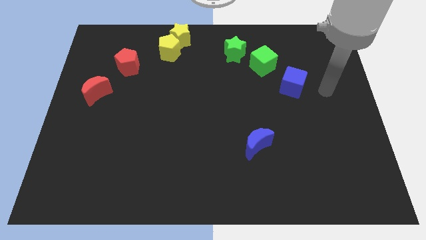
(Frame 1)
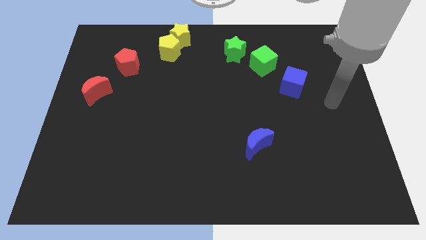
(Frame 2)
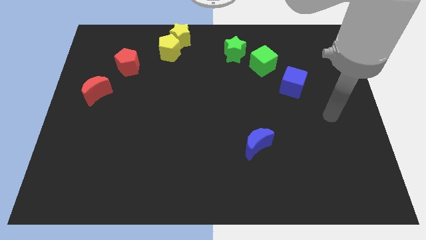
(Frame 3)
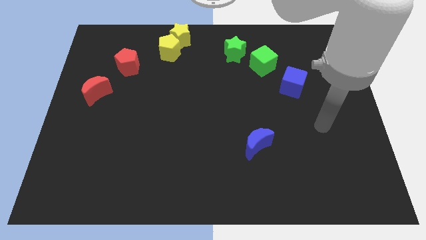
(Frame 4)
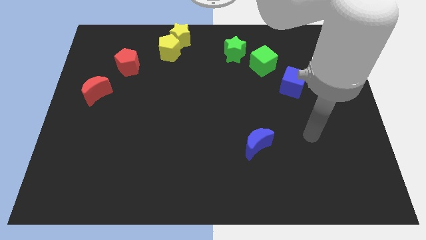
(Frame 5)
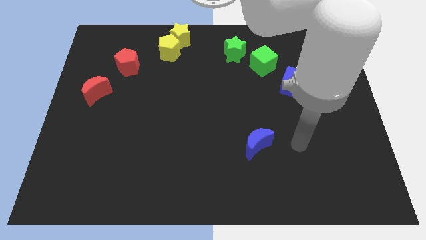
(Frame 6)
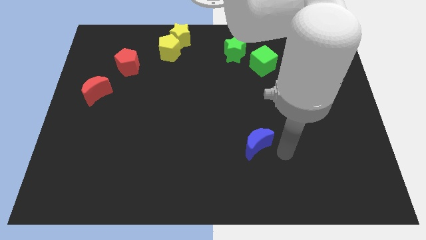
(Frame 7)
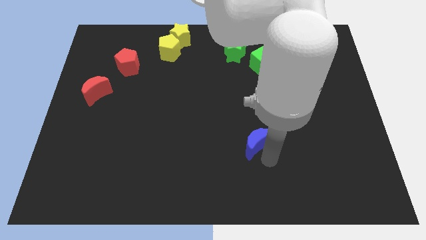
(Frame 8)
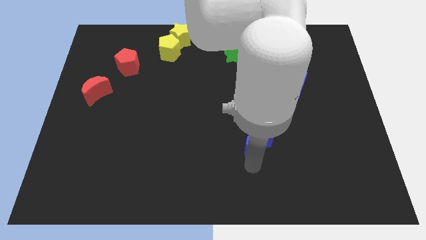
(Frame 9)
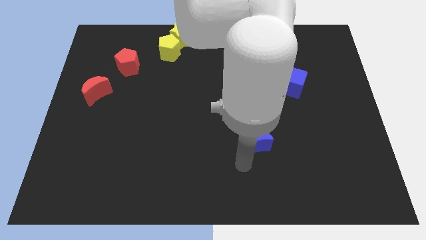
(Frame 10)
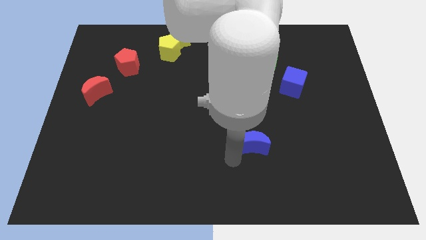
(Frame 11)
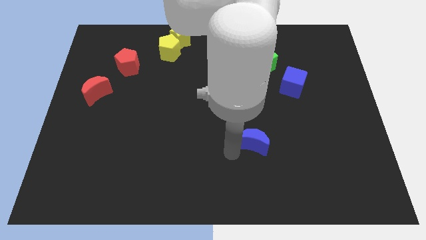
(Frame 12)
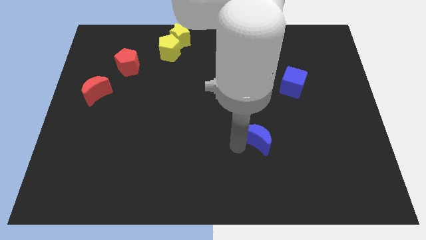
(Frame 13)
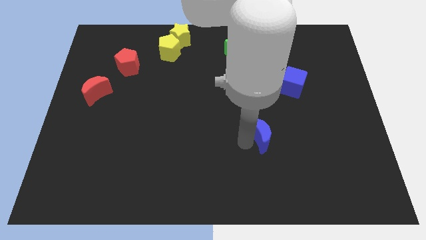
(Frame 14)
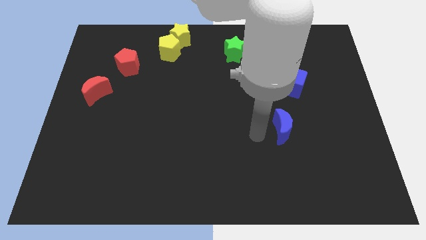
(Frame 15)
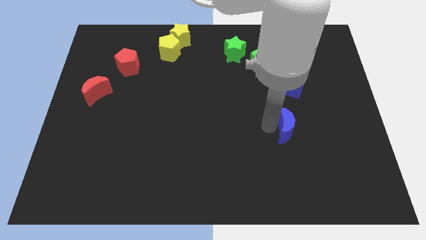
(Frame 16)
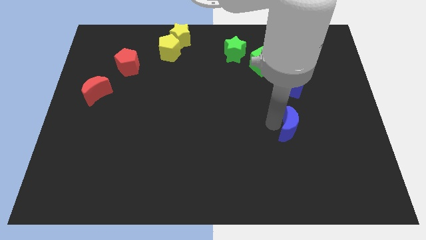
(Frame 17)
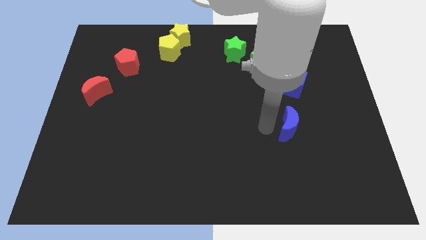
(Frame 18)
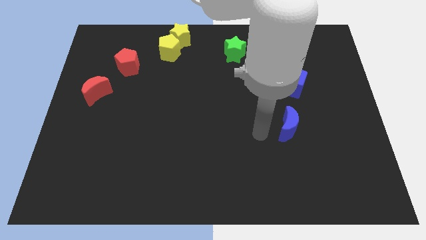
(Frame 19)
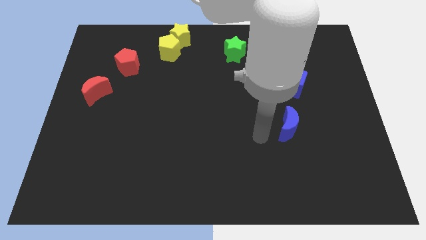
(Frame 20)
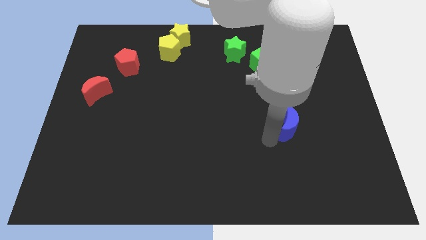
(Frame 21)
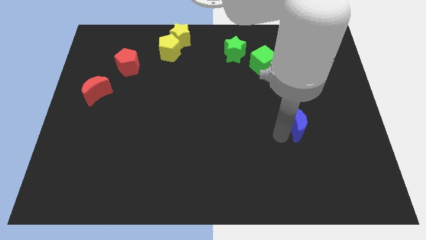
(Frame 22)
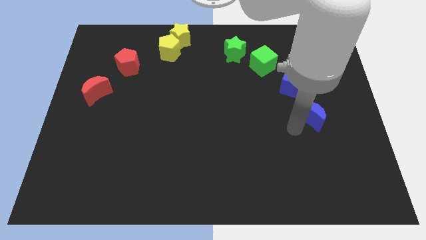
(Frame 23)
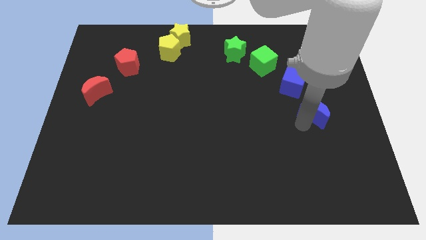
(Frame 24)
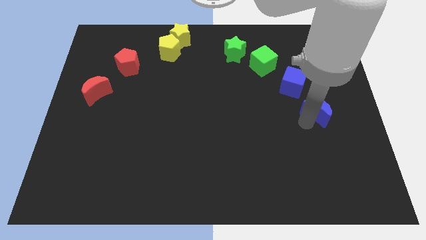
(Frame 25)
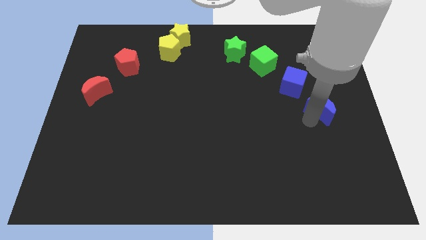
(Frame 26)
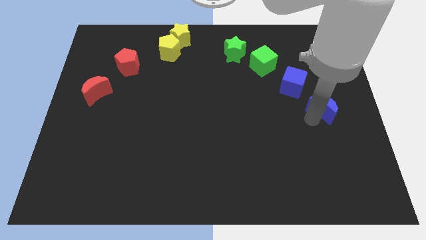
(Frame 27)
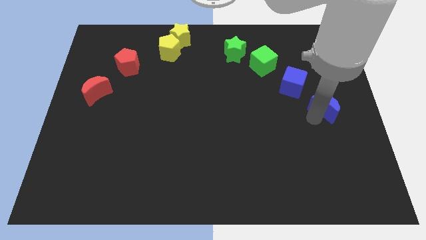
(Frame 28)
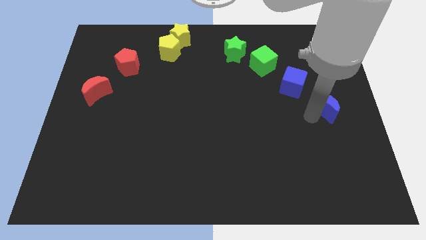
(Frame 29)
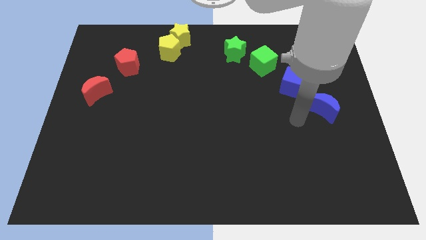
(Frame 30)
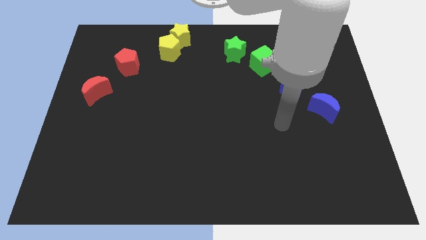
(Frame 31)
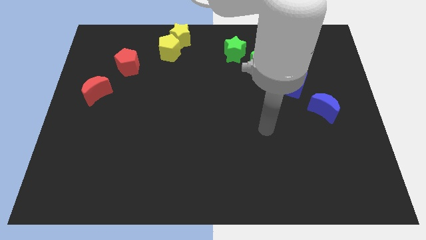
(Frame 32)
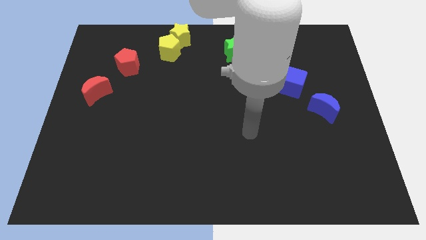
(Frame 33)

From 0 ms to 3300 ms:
place the blue moon to the bottom side of the blue cube

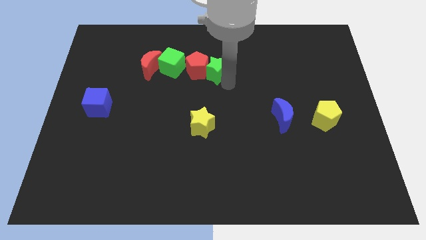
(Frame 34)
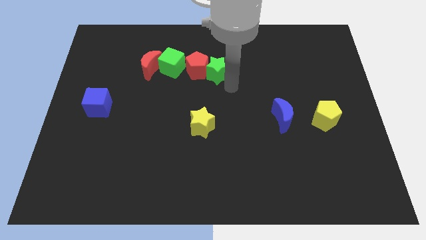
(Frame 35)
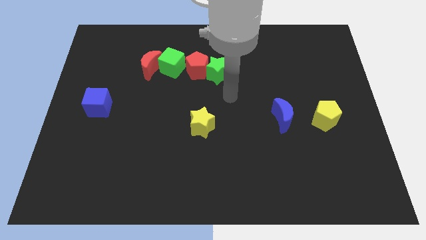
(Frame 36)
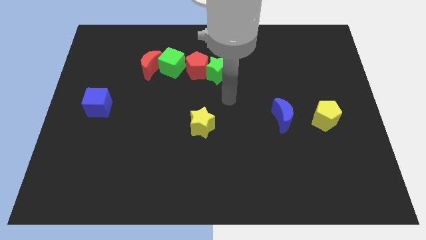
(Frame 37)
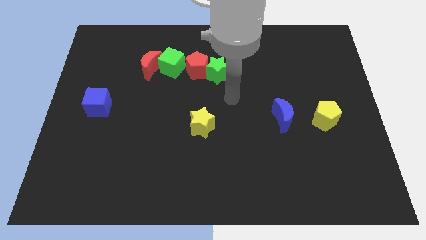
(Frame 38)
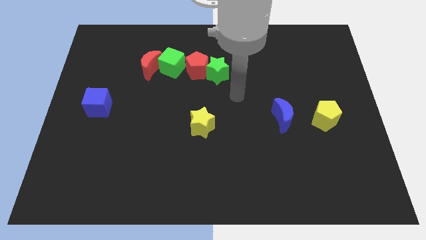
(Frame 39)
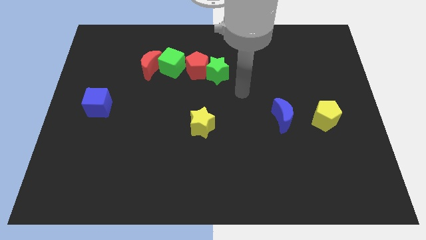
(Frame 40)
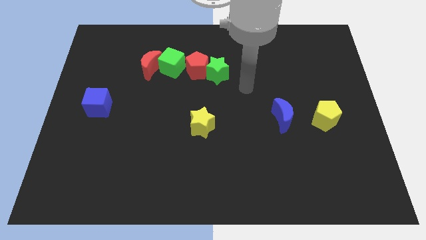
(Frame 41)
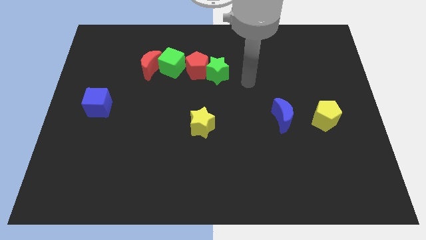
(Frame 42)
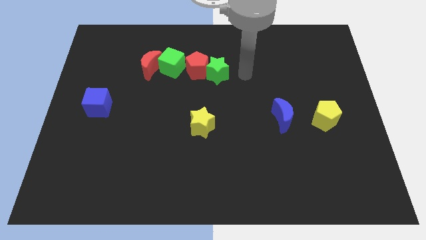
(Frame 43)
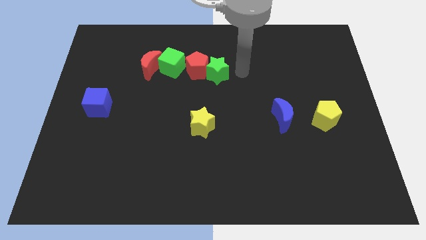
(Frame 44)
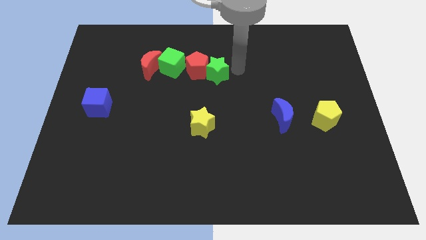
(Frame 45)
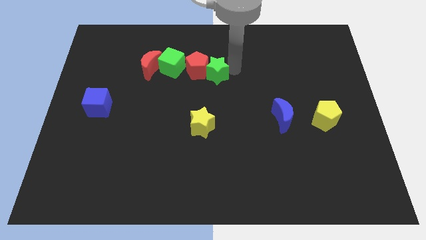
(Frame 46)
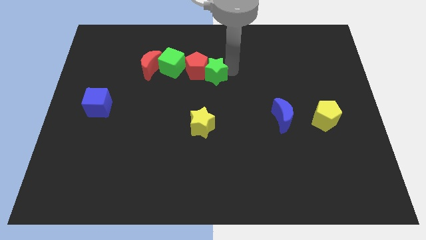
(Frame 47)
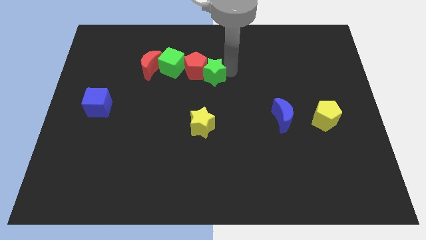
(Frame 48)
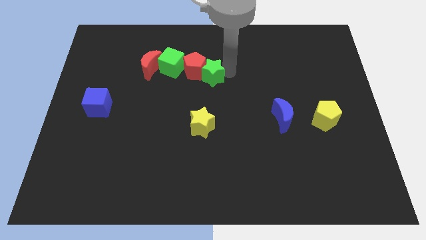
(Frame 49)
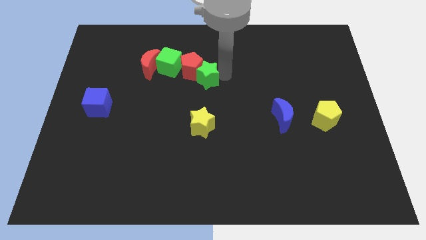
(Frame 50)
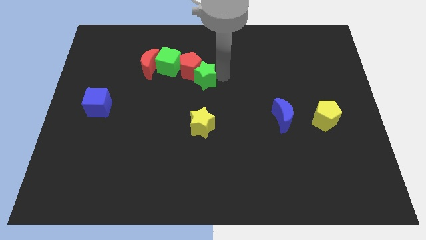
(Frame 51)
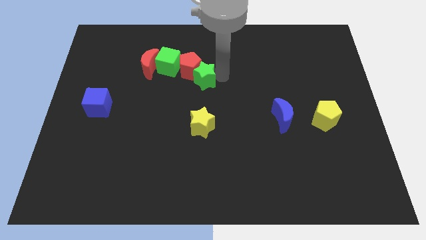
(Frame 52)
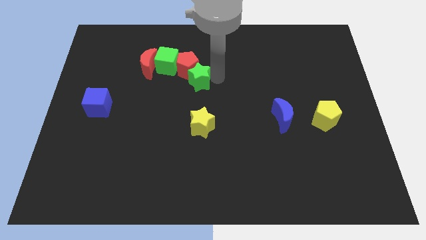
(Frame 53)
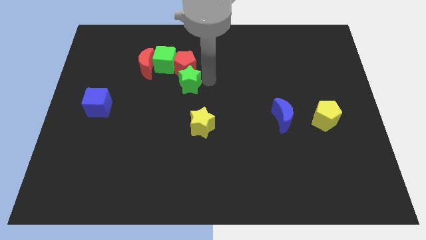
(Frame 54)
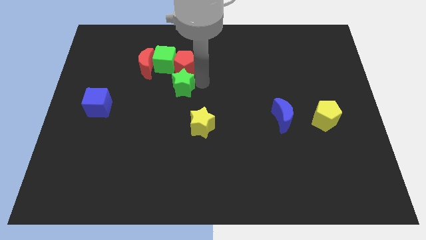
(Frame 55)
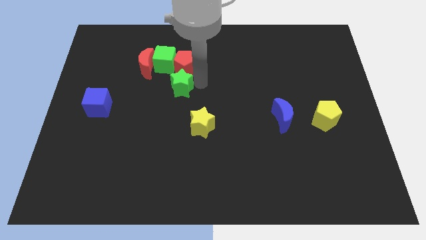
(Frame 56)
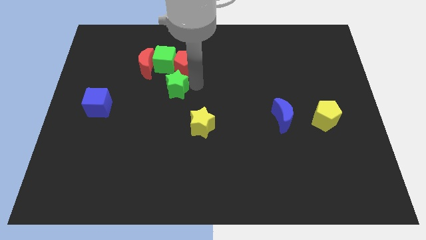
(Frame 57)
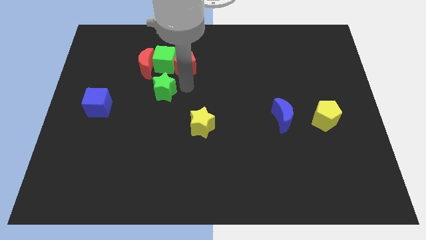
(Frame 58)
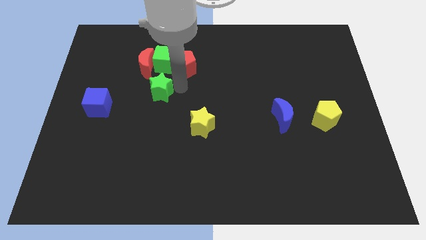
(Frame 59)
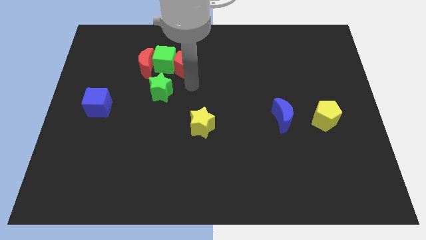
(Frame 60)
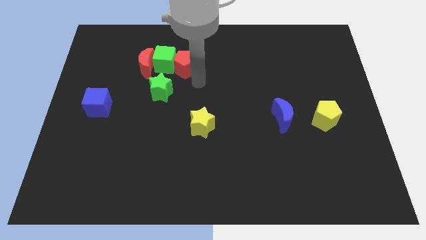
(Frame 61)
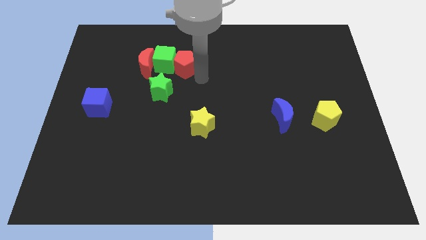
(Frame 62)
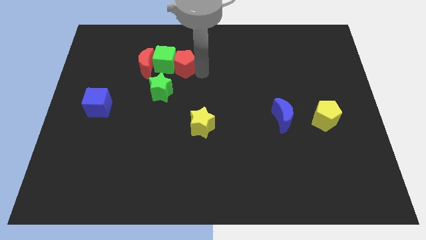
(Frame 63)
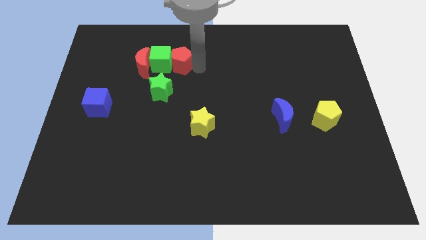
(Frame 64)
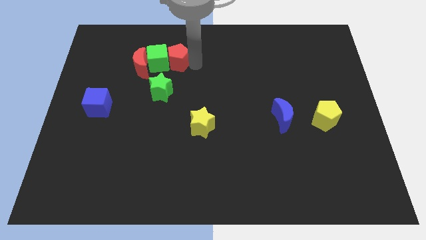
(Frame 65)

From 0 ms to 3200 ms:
place green star vertical to green cube

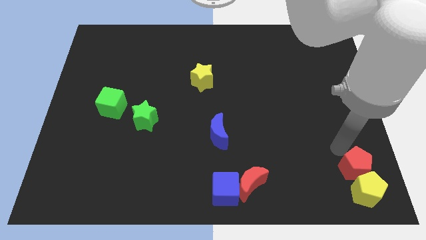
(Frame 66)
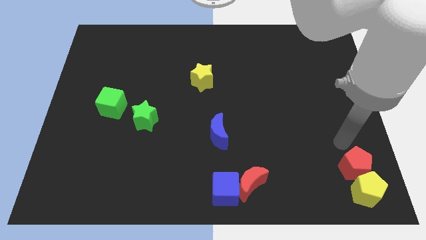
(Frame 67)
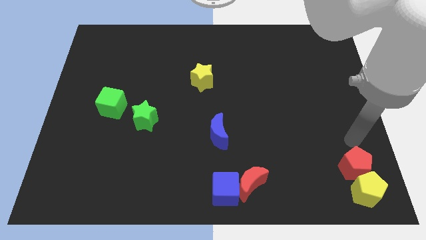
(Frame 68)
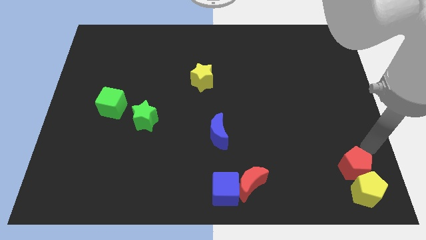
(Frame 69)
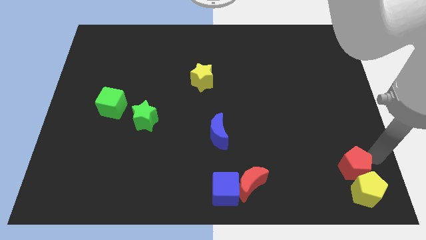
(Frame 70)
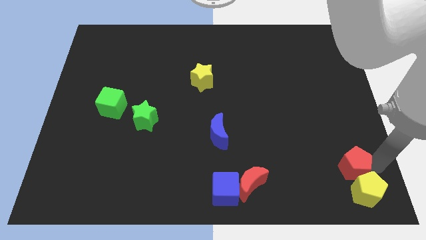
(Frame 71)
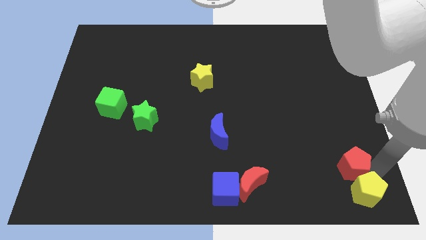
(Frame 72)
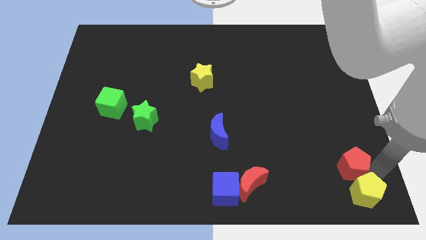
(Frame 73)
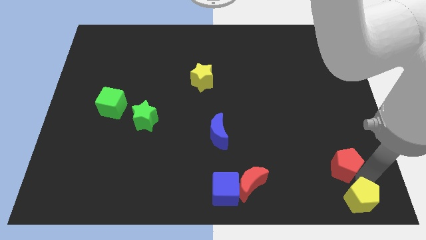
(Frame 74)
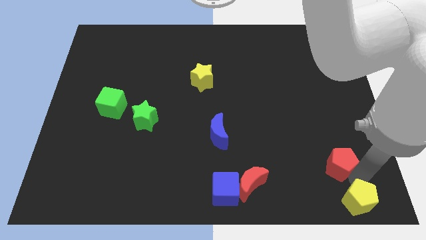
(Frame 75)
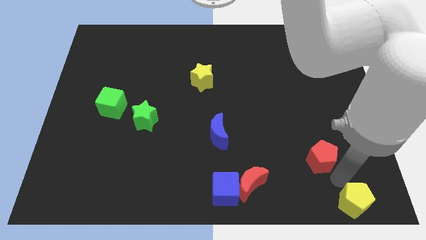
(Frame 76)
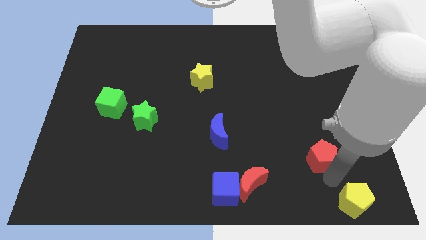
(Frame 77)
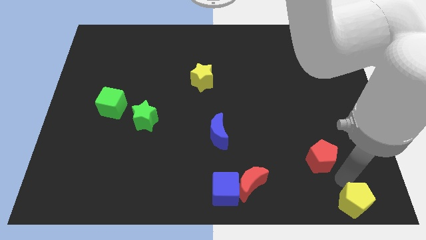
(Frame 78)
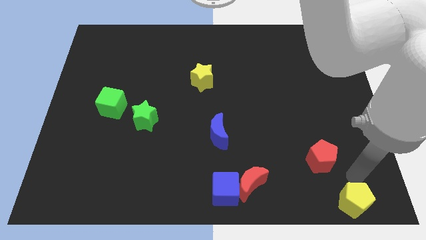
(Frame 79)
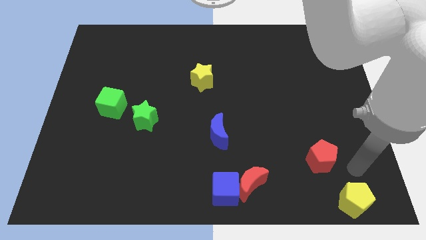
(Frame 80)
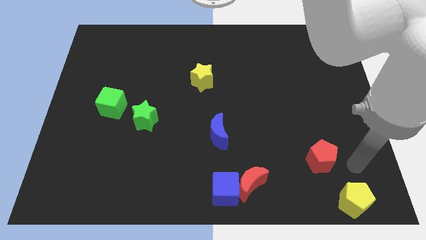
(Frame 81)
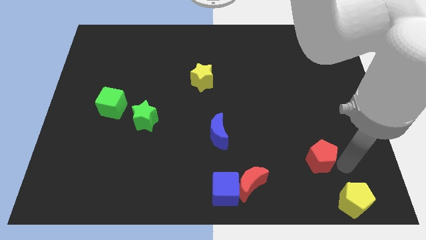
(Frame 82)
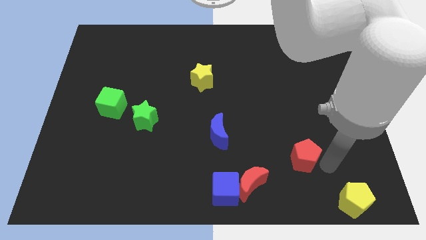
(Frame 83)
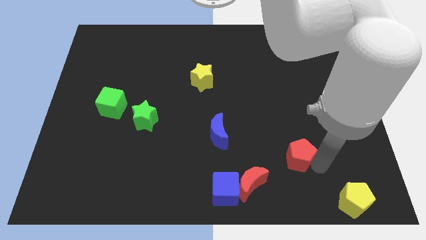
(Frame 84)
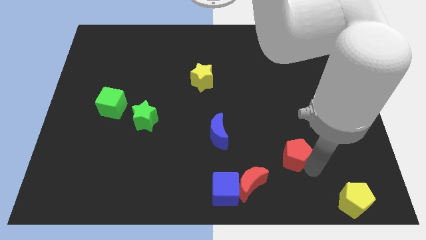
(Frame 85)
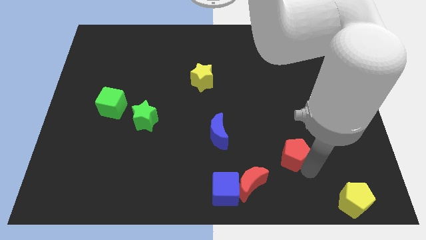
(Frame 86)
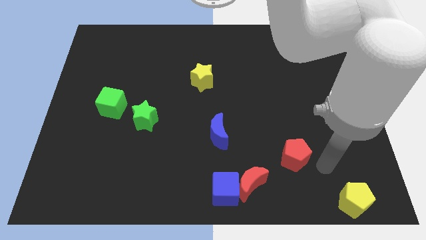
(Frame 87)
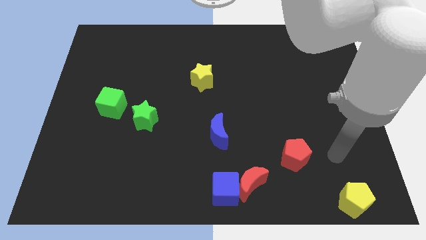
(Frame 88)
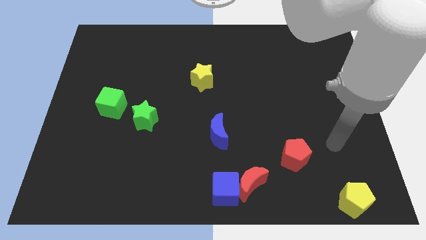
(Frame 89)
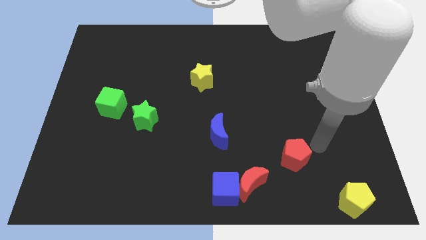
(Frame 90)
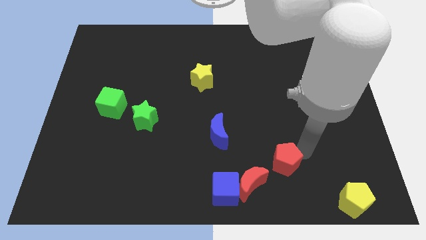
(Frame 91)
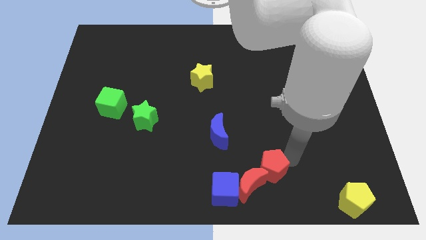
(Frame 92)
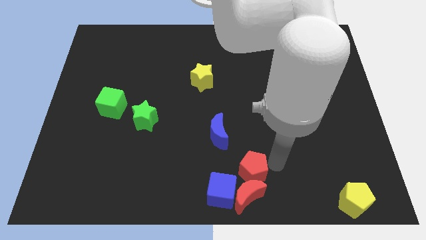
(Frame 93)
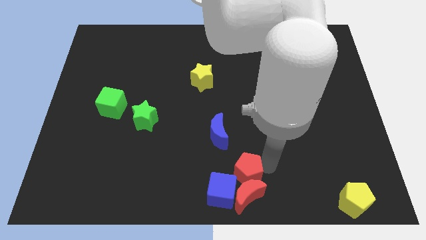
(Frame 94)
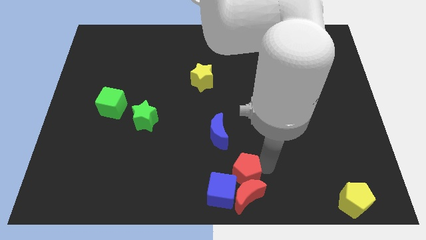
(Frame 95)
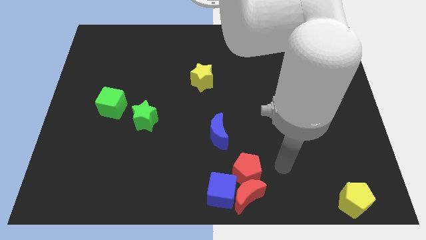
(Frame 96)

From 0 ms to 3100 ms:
move the red pentagon to the top of the red crescent
